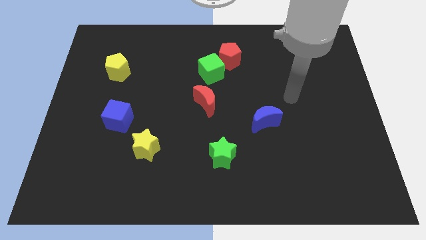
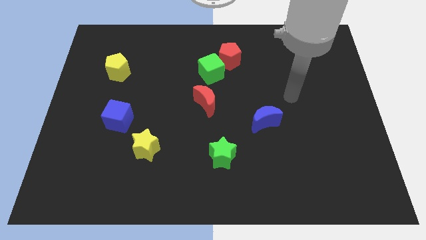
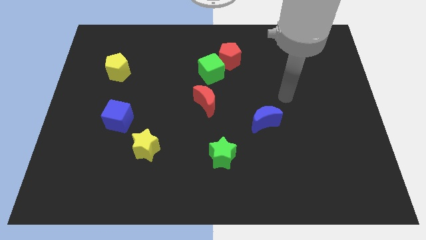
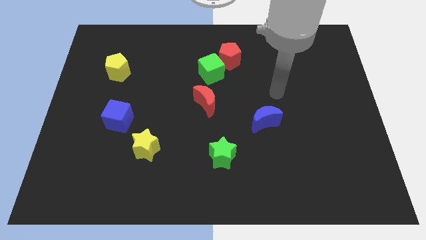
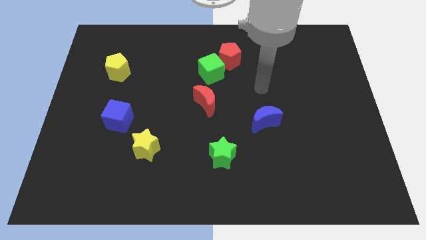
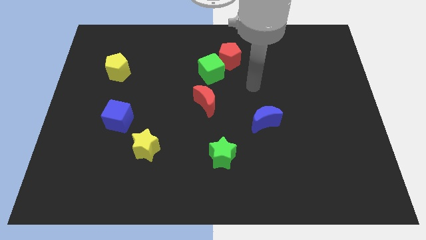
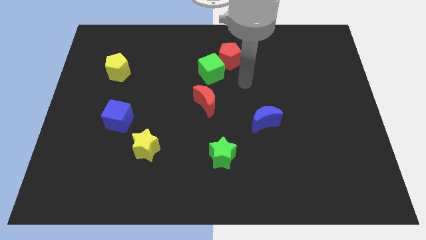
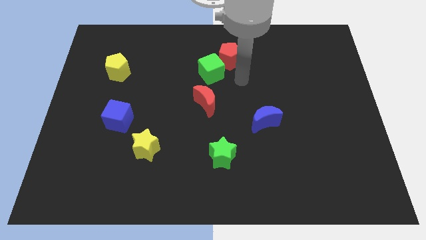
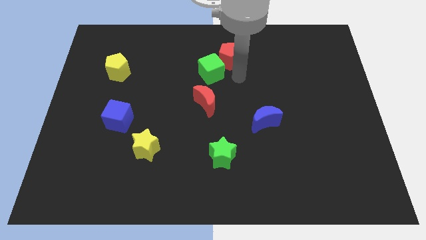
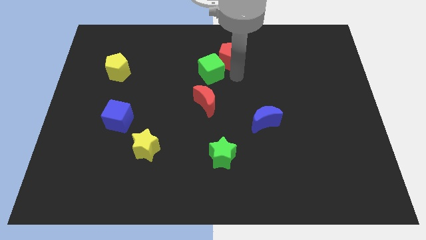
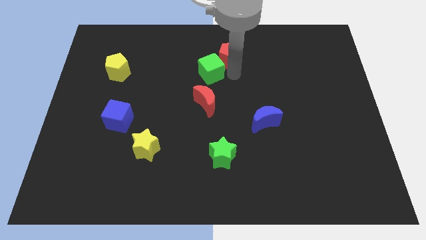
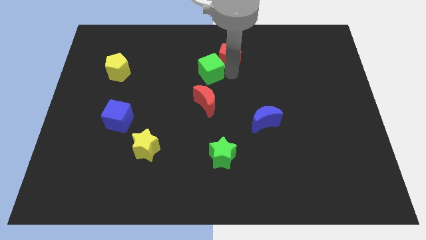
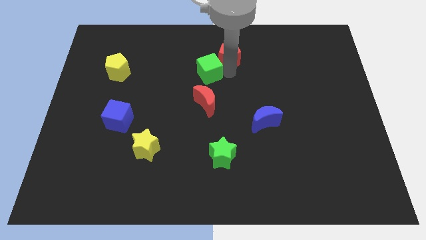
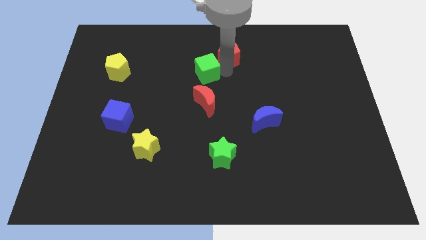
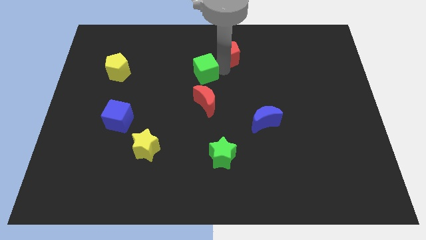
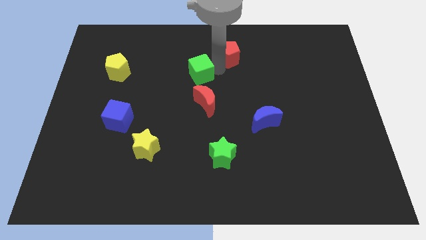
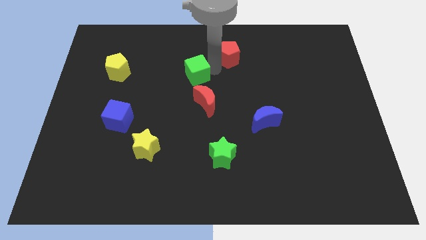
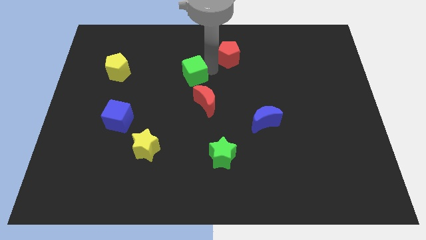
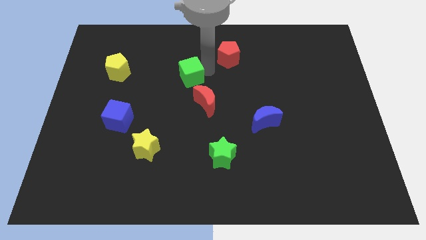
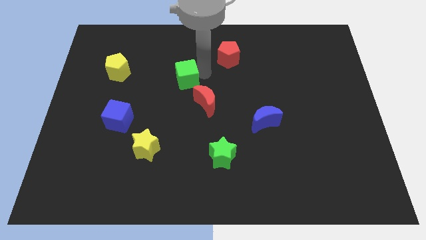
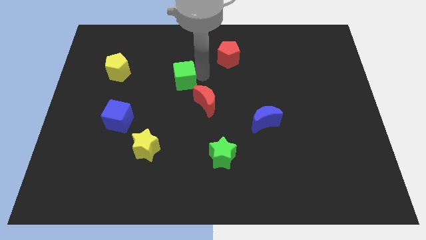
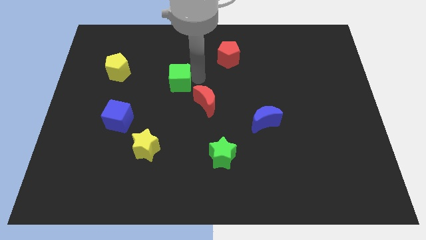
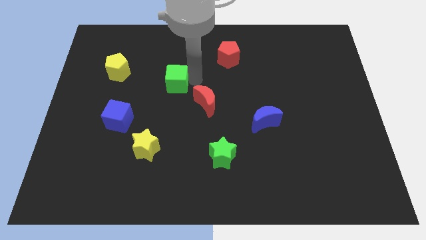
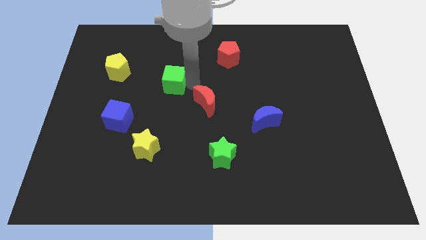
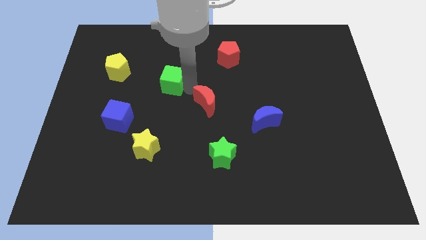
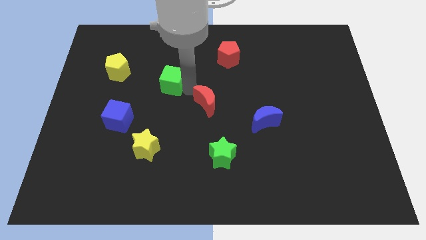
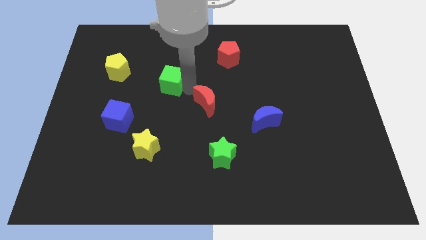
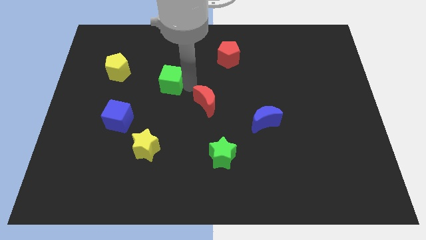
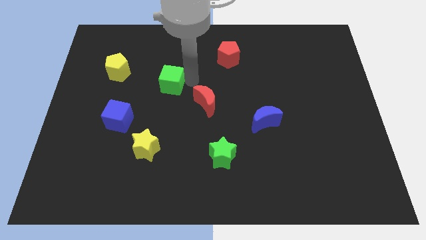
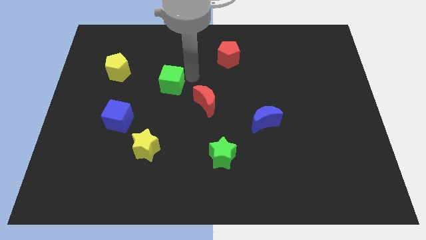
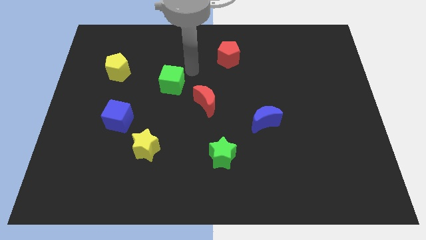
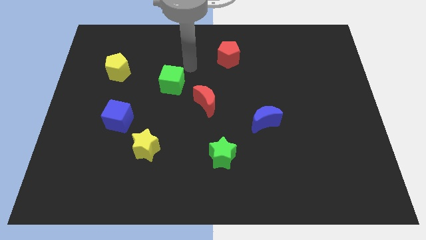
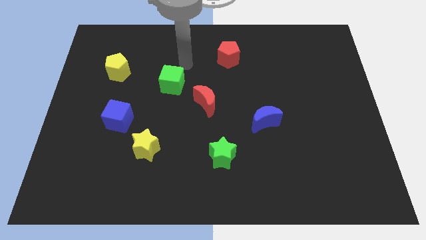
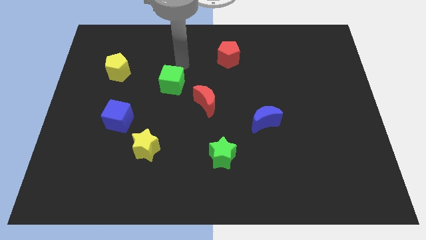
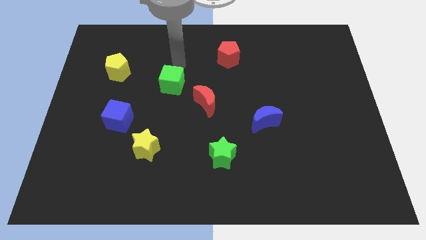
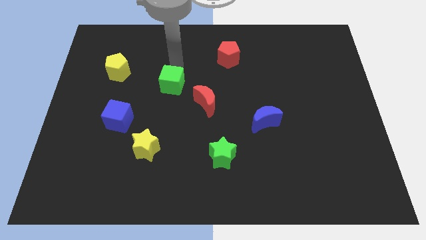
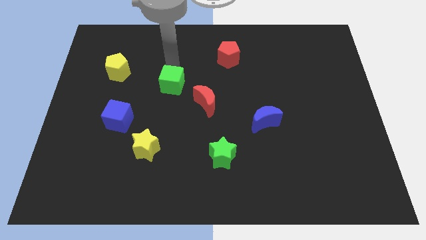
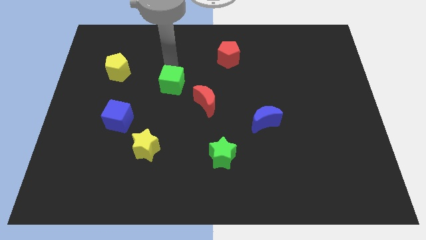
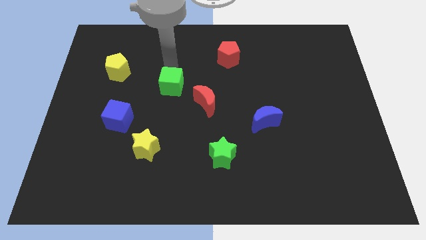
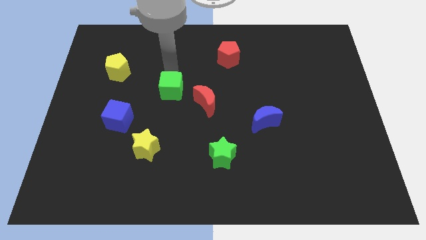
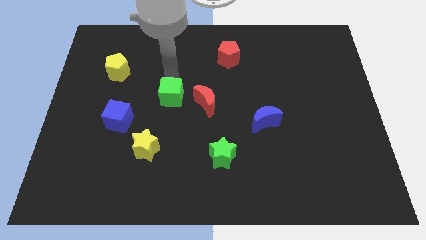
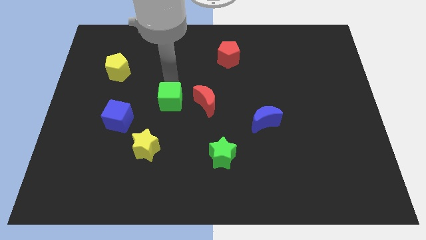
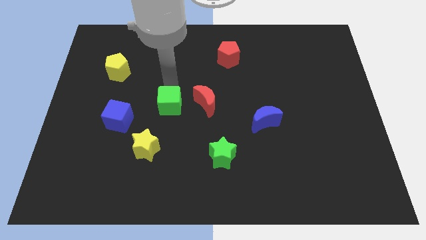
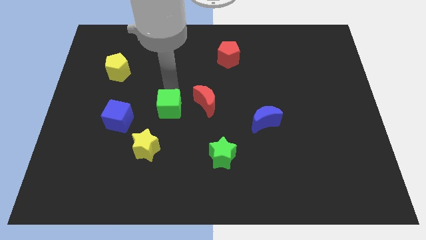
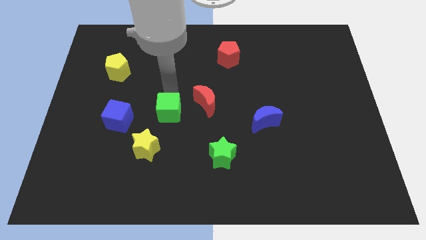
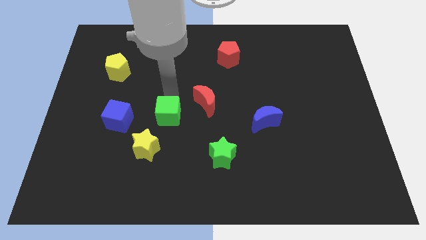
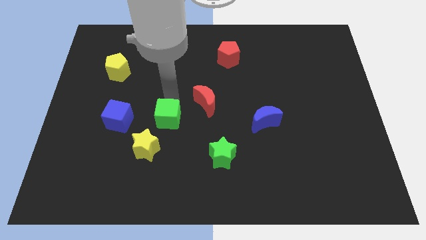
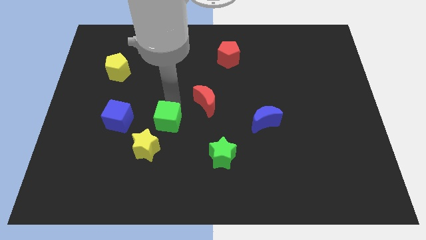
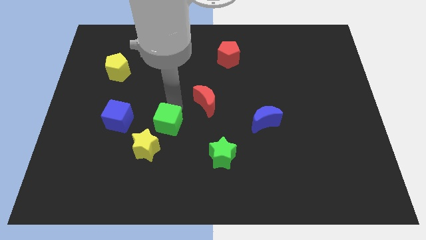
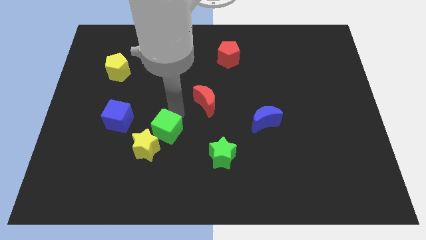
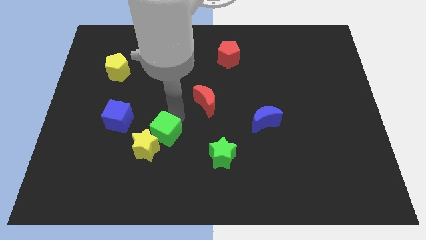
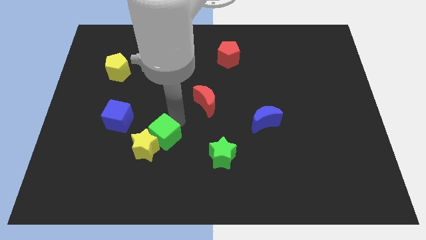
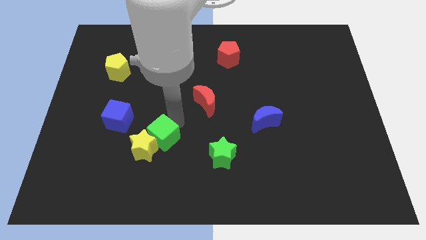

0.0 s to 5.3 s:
push the green cube to the yellow star

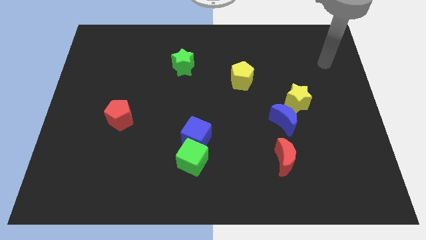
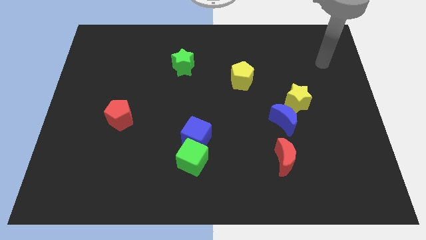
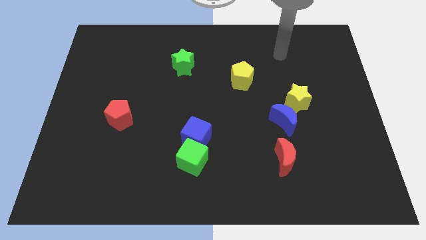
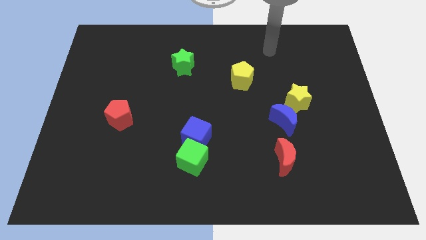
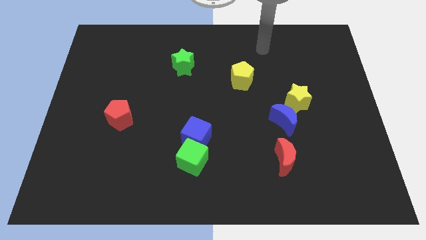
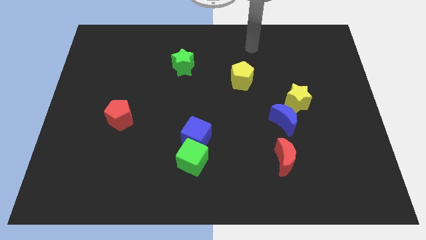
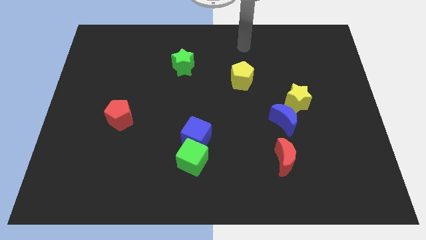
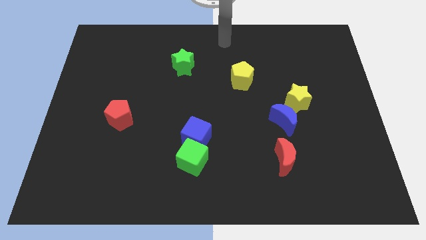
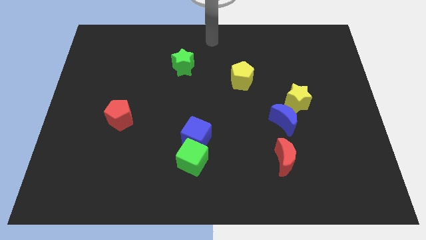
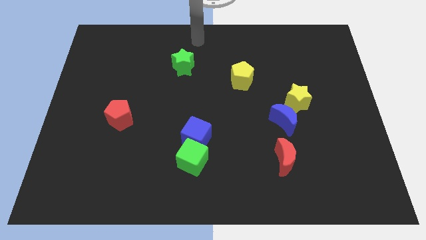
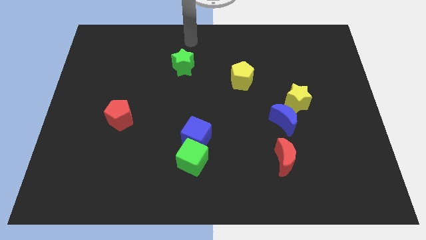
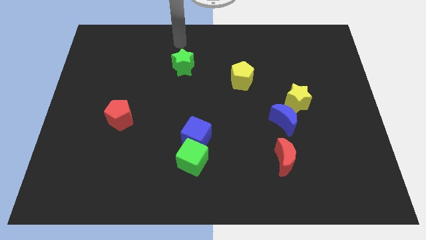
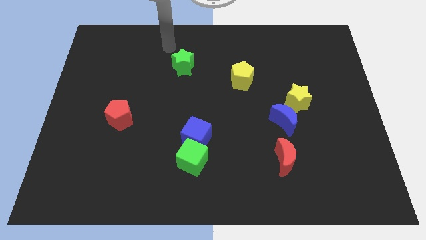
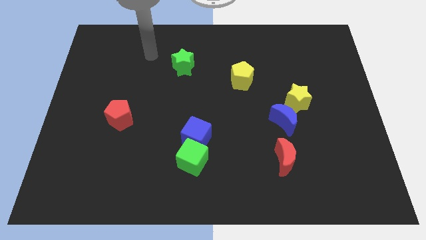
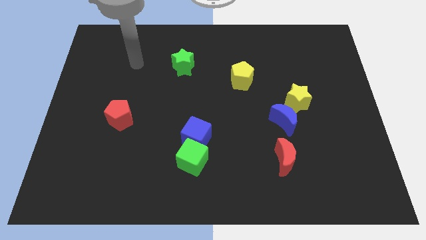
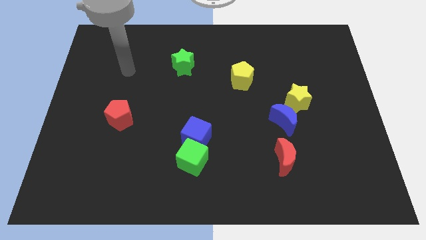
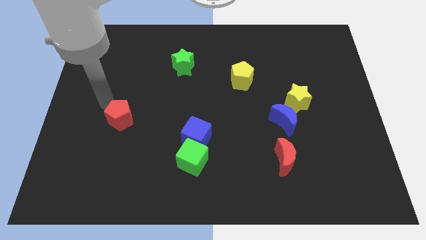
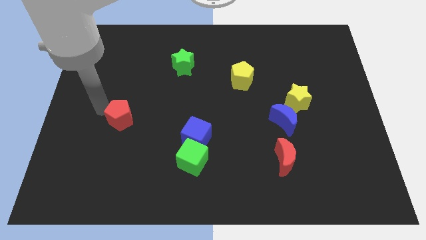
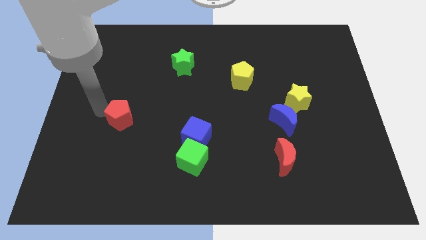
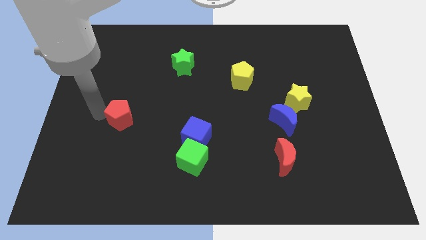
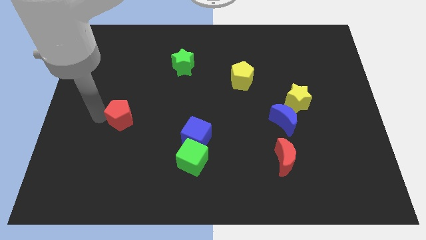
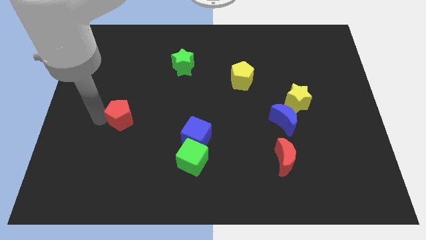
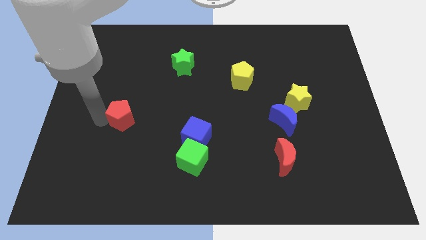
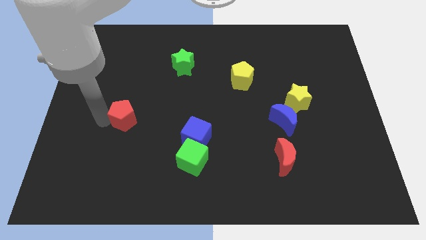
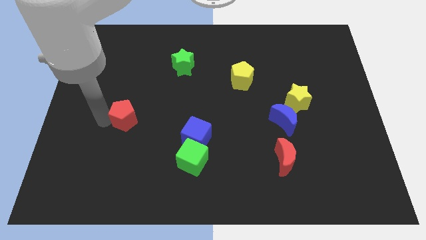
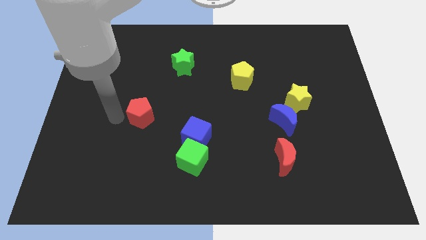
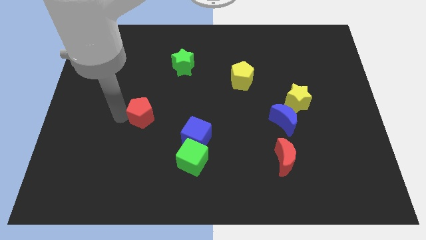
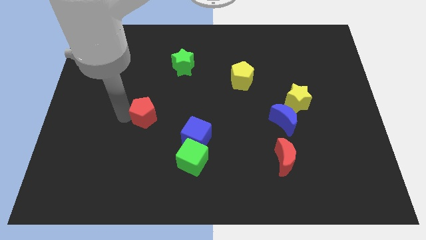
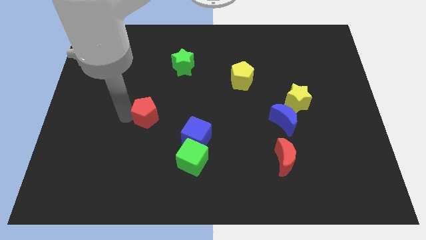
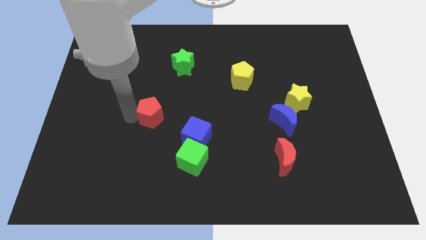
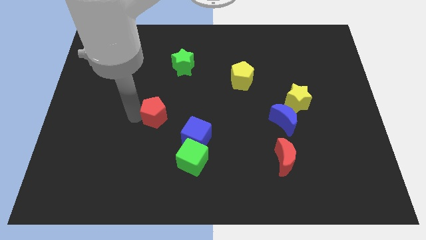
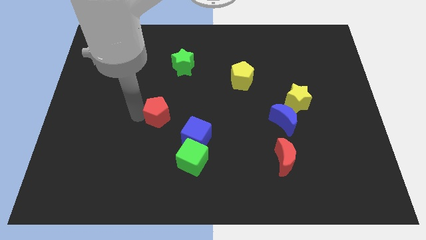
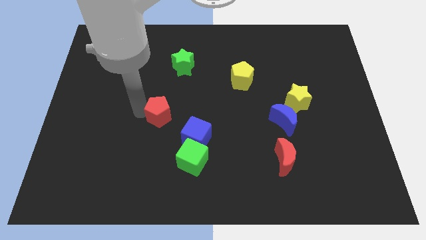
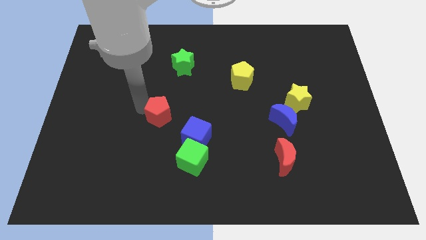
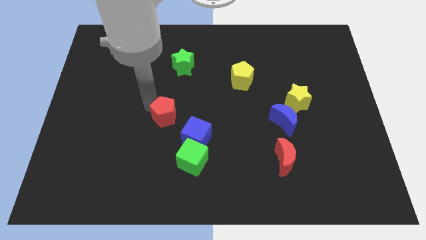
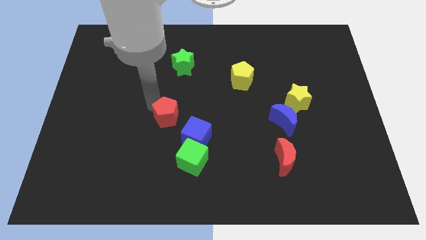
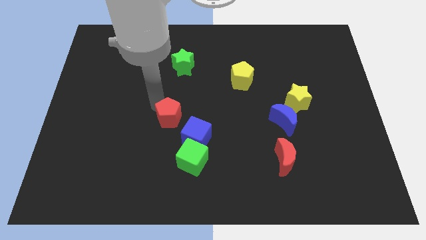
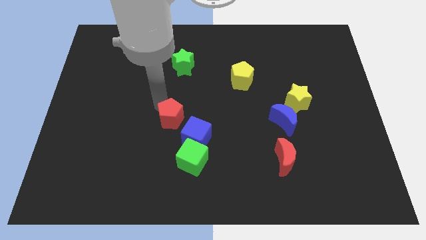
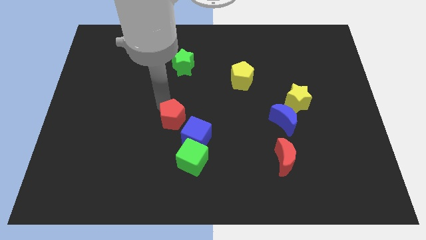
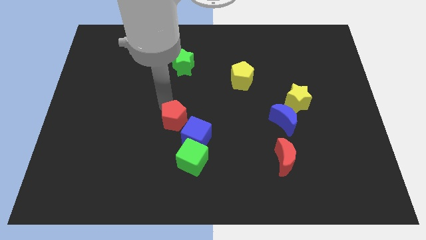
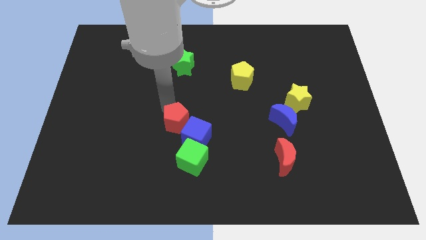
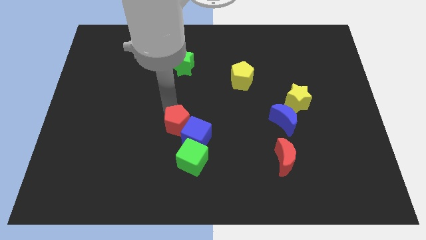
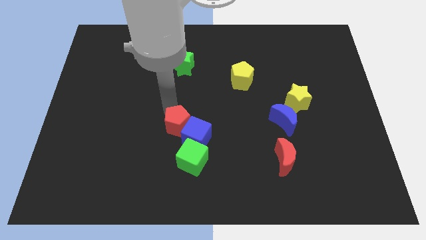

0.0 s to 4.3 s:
put the red pentagon next to the blue cube
